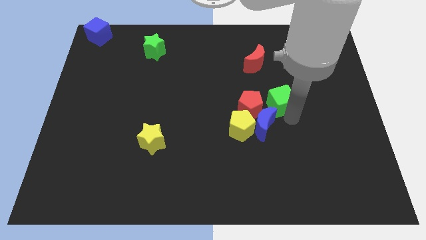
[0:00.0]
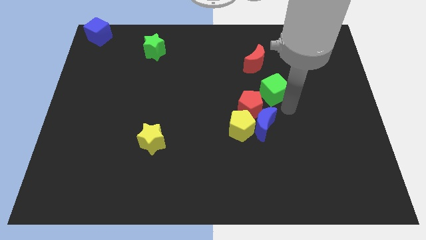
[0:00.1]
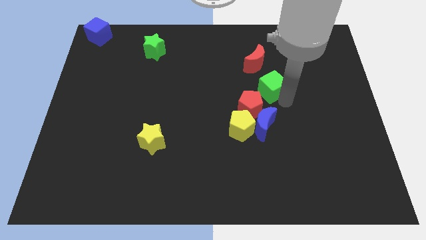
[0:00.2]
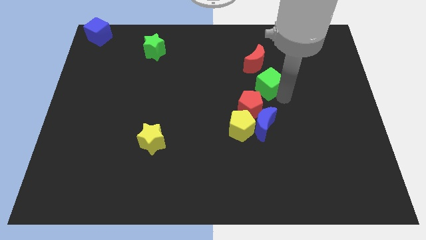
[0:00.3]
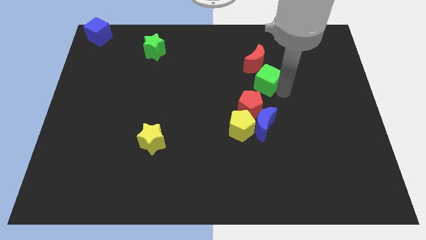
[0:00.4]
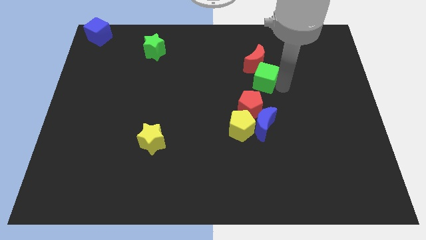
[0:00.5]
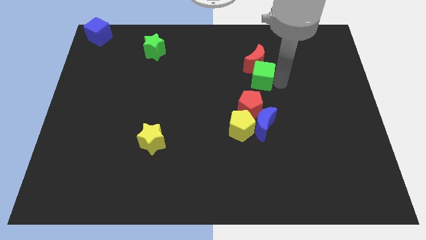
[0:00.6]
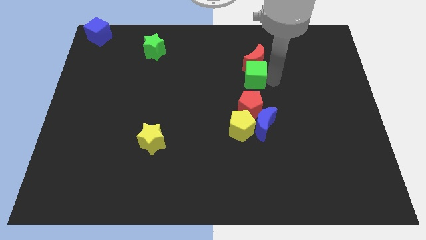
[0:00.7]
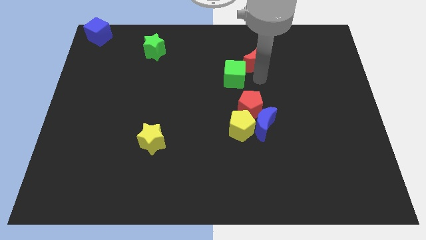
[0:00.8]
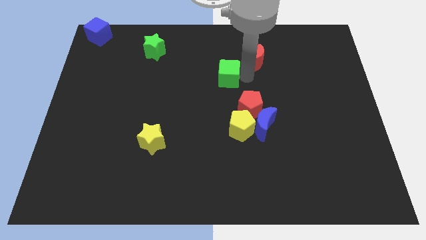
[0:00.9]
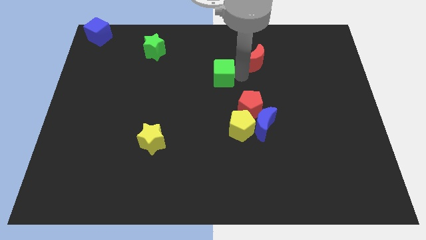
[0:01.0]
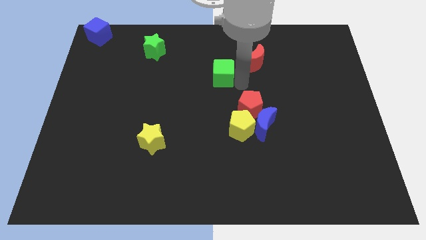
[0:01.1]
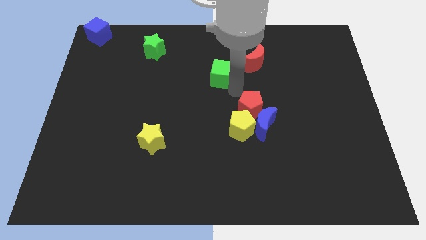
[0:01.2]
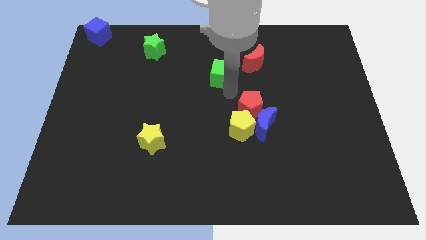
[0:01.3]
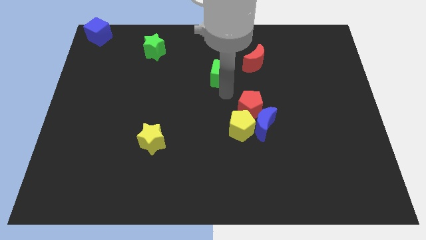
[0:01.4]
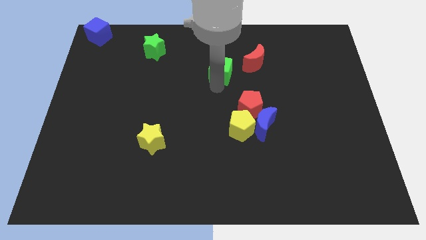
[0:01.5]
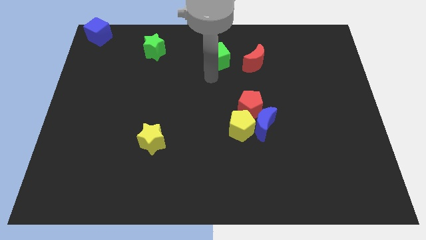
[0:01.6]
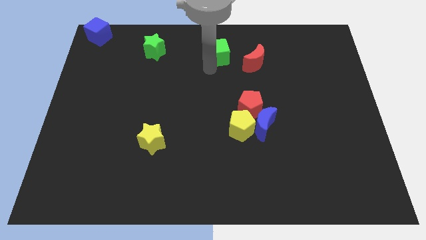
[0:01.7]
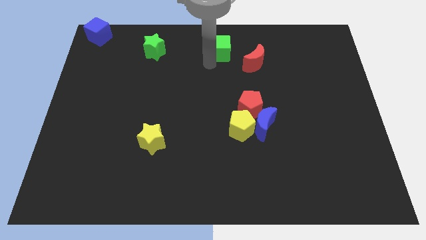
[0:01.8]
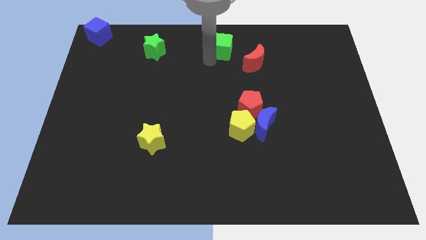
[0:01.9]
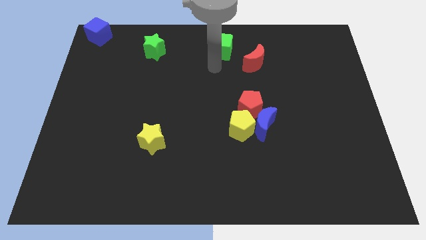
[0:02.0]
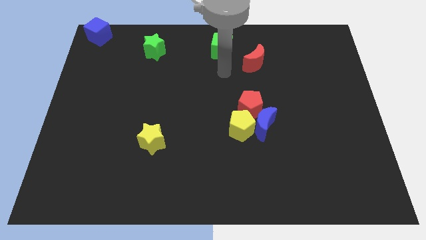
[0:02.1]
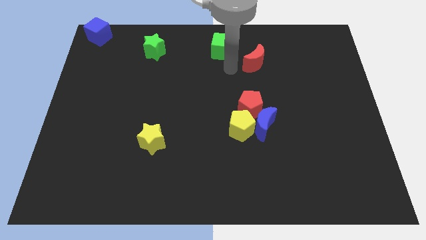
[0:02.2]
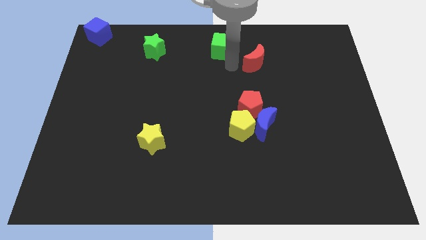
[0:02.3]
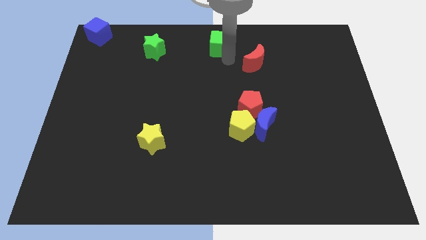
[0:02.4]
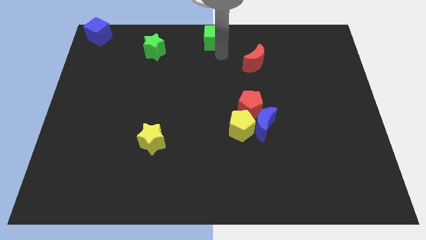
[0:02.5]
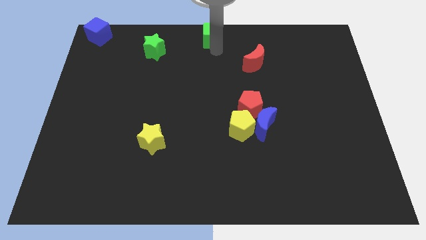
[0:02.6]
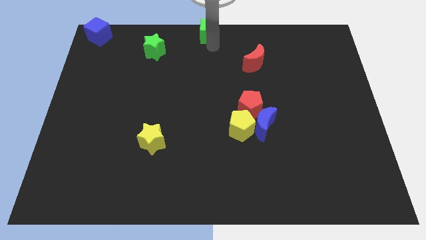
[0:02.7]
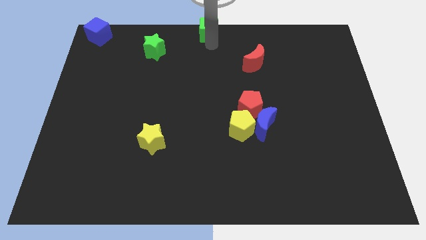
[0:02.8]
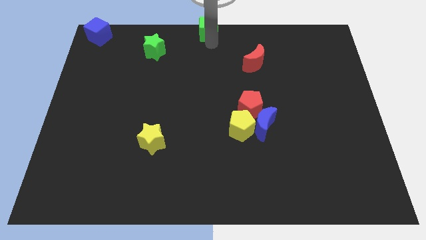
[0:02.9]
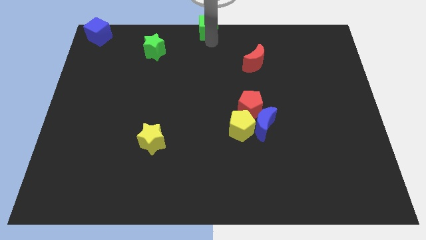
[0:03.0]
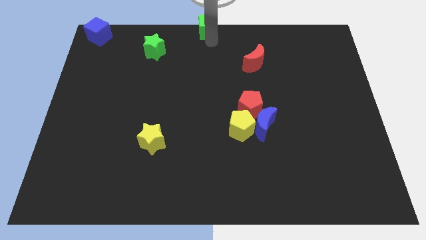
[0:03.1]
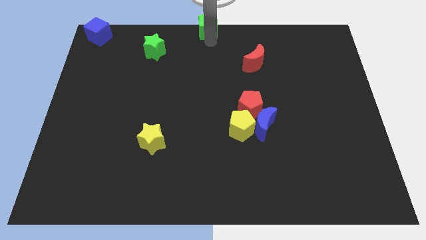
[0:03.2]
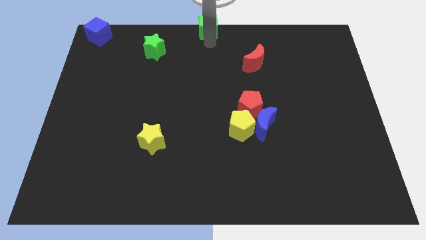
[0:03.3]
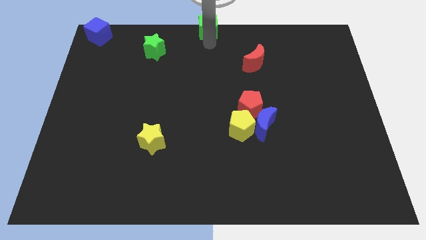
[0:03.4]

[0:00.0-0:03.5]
place the green cube at the top center of the board

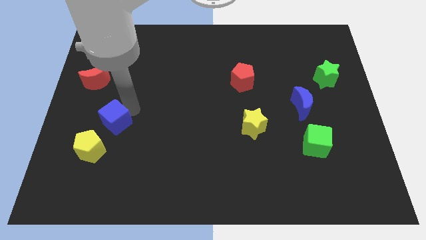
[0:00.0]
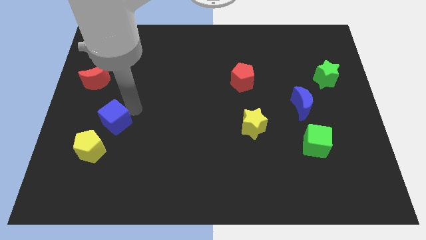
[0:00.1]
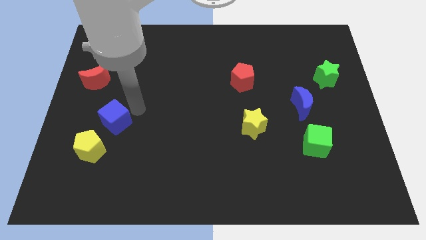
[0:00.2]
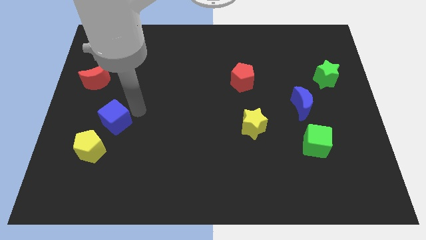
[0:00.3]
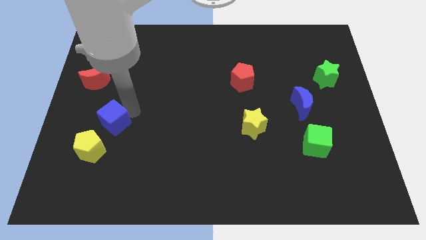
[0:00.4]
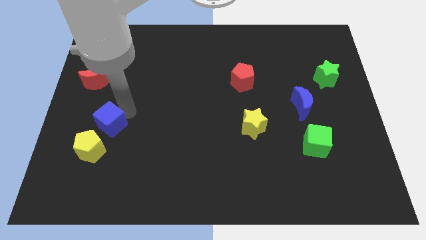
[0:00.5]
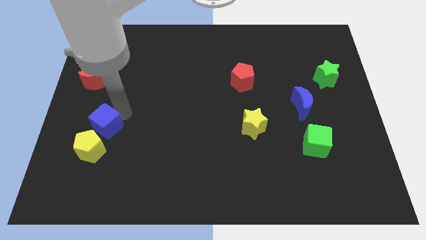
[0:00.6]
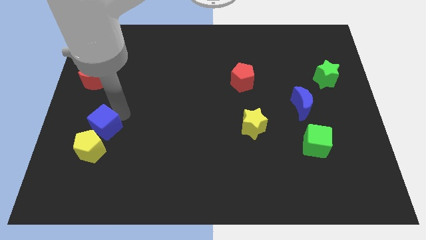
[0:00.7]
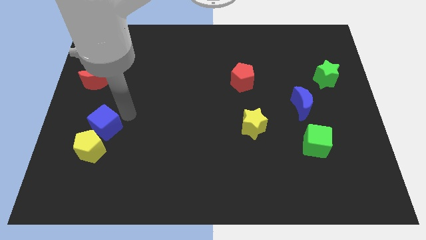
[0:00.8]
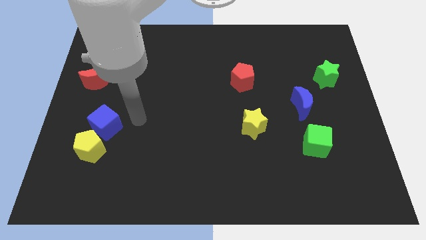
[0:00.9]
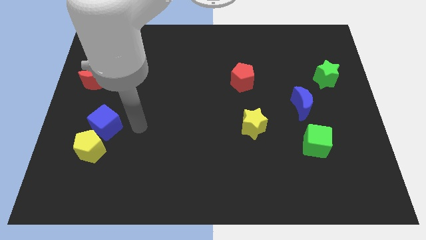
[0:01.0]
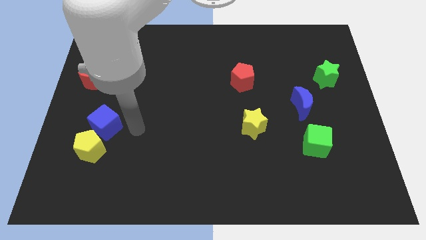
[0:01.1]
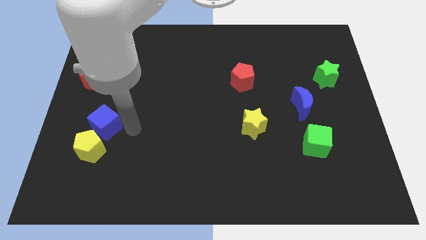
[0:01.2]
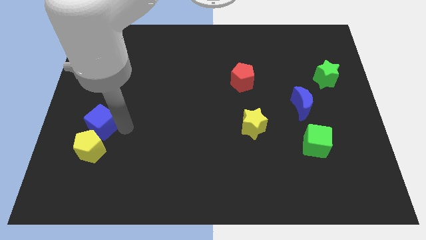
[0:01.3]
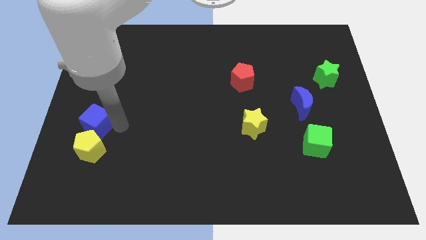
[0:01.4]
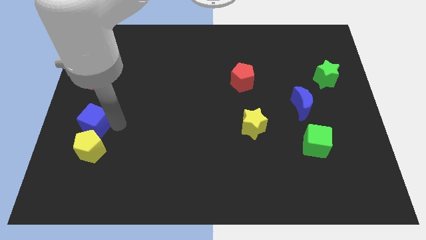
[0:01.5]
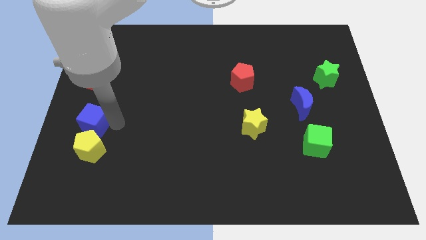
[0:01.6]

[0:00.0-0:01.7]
place blue cube above the yellow pentagon

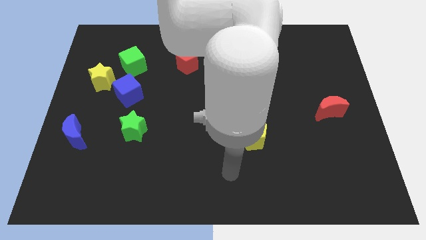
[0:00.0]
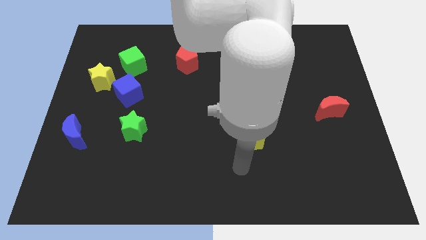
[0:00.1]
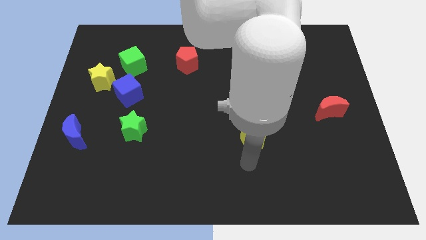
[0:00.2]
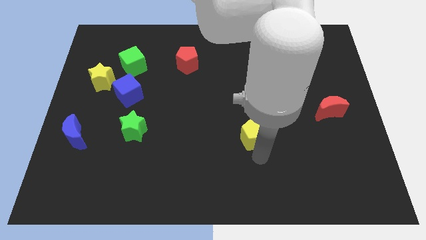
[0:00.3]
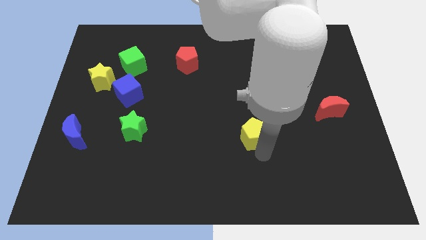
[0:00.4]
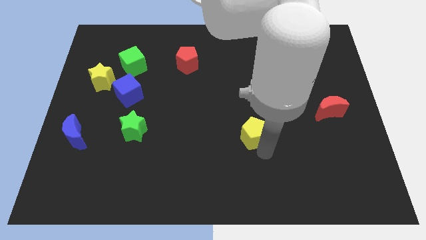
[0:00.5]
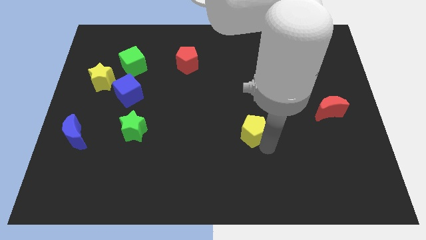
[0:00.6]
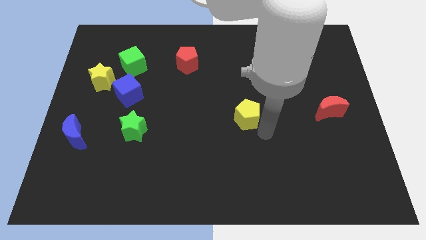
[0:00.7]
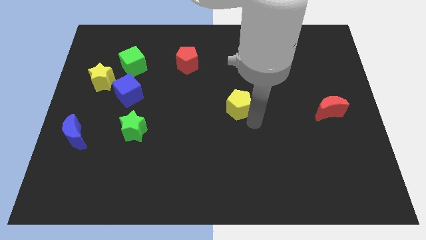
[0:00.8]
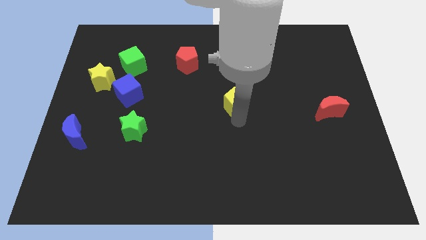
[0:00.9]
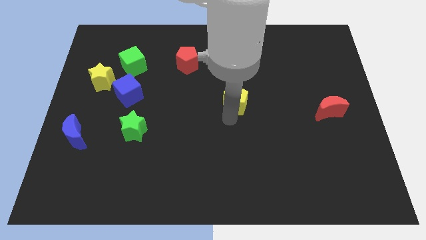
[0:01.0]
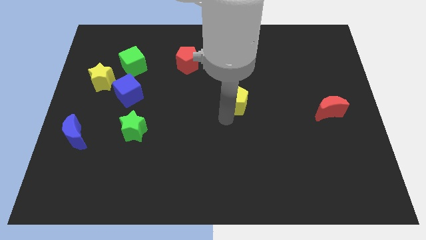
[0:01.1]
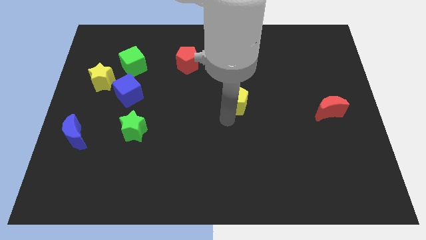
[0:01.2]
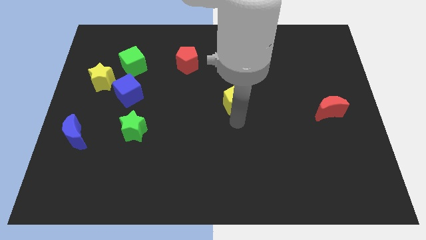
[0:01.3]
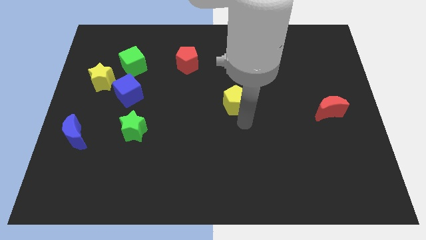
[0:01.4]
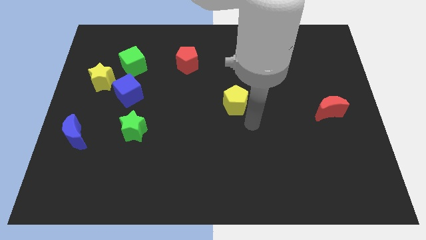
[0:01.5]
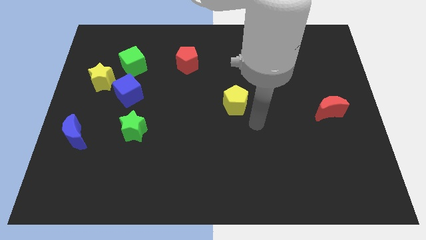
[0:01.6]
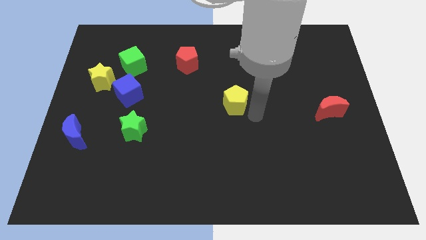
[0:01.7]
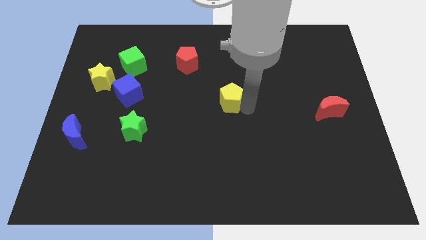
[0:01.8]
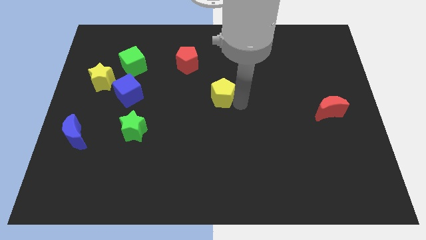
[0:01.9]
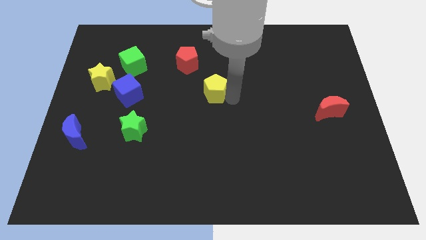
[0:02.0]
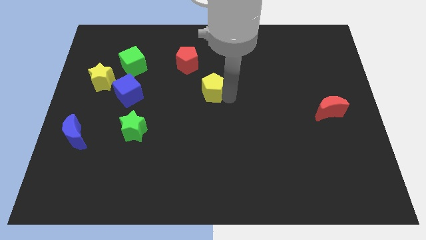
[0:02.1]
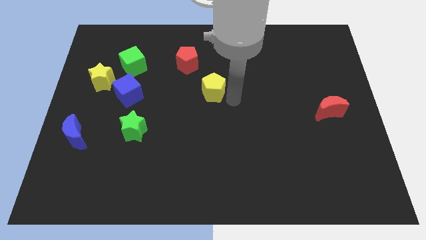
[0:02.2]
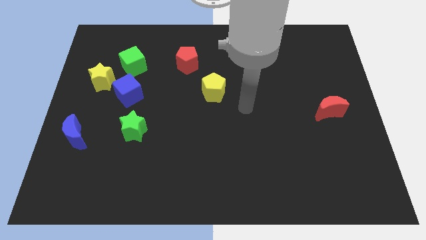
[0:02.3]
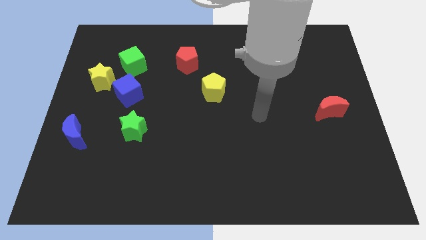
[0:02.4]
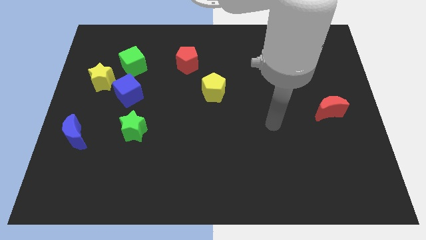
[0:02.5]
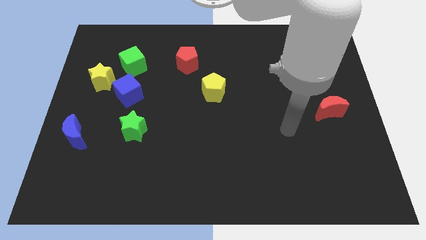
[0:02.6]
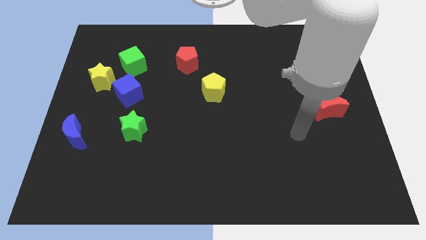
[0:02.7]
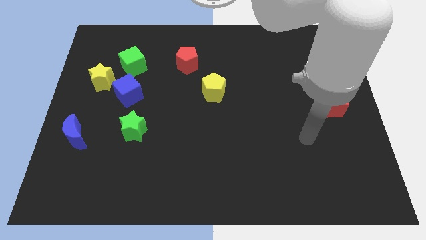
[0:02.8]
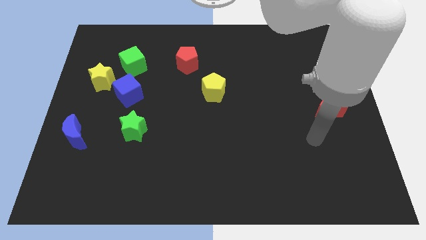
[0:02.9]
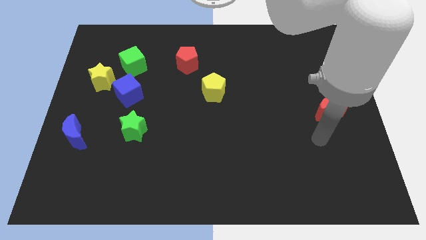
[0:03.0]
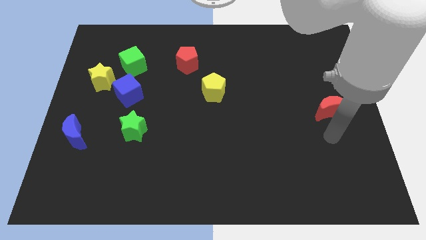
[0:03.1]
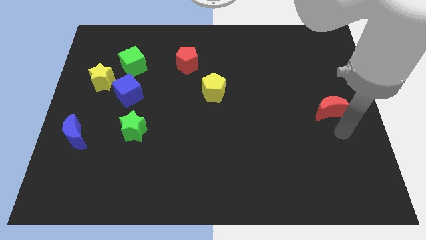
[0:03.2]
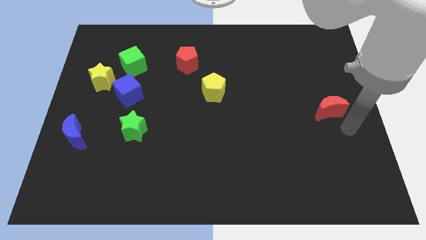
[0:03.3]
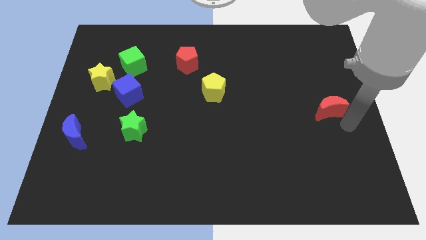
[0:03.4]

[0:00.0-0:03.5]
put the yellow pentagon diagonally to the bottom right of the red pentagon

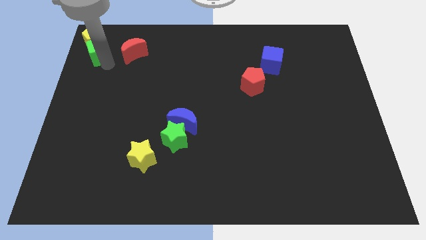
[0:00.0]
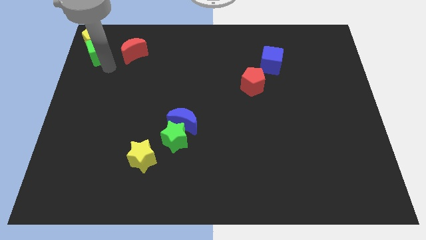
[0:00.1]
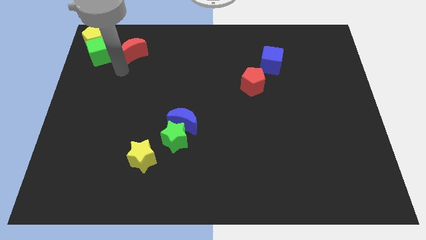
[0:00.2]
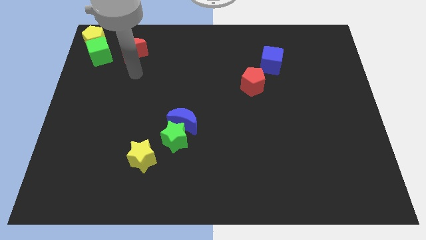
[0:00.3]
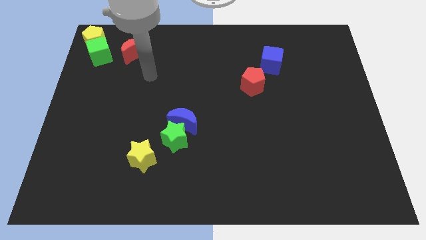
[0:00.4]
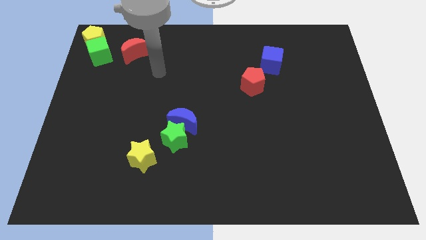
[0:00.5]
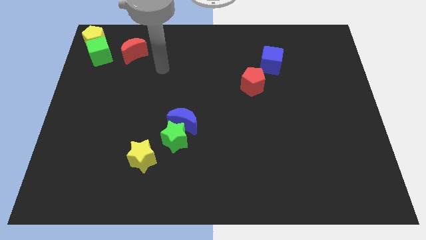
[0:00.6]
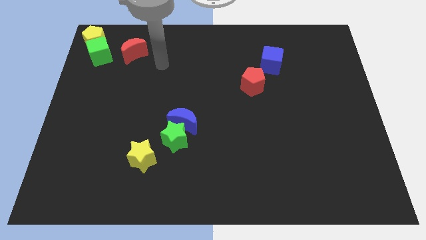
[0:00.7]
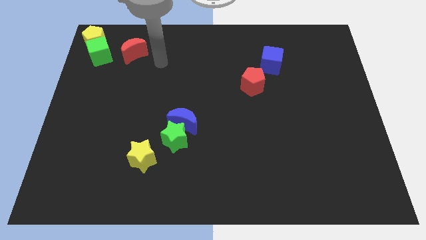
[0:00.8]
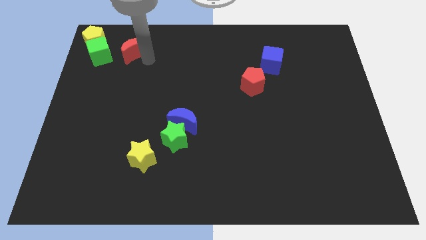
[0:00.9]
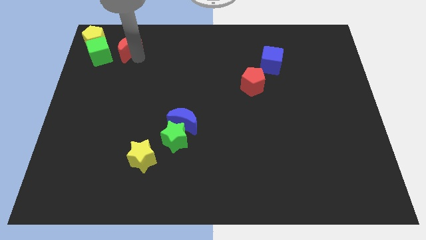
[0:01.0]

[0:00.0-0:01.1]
move the arm away from the green cube
